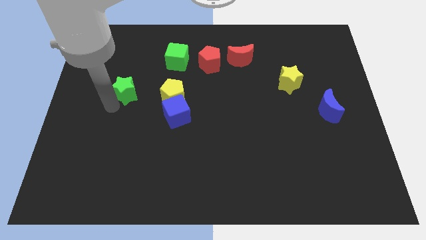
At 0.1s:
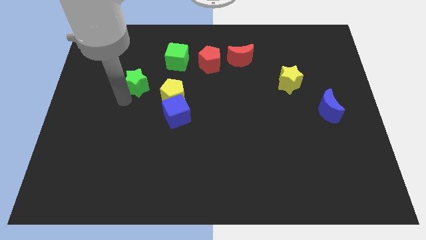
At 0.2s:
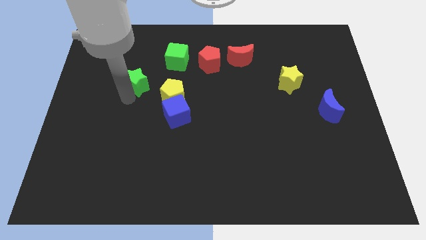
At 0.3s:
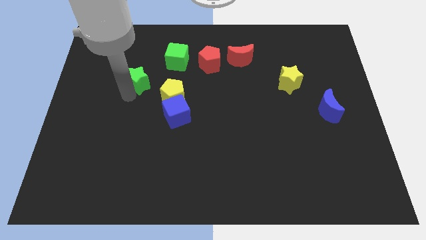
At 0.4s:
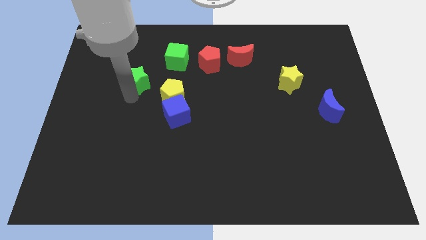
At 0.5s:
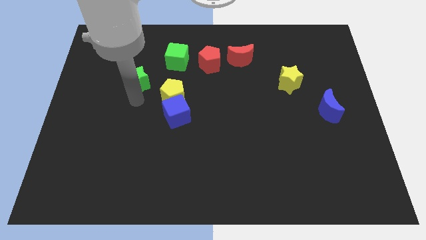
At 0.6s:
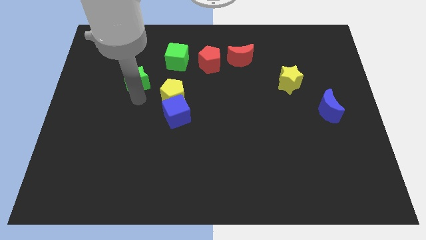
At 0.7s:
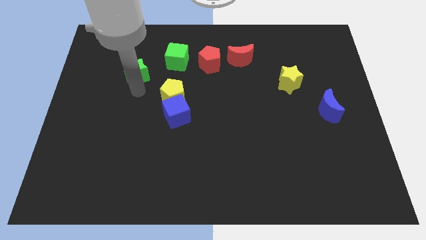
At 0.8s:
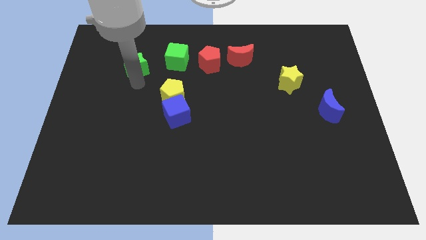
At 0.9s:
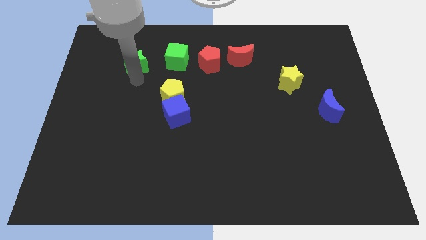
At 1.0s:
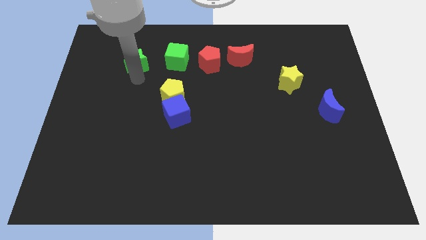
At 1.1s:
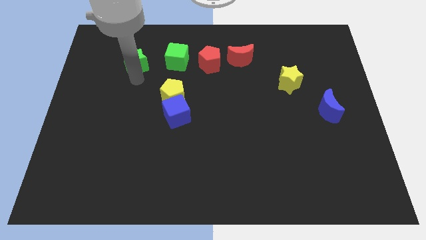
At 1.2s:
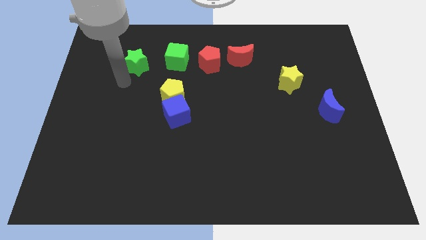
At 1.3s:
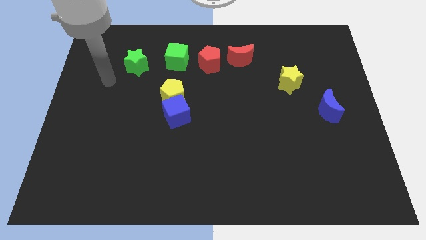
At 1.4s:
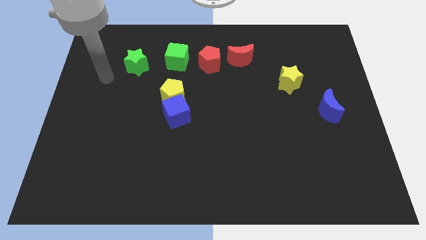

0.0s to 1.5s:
place green star to the left of green cube

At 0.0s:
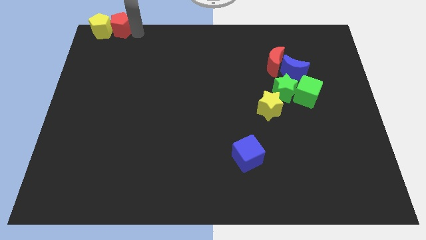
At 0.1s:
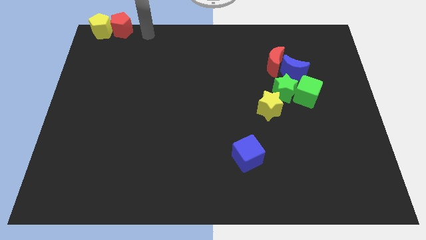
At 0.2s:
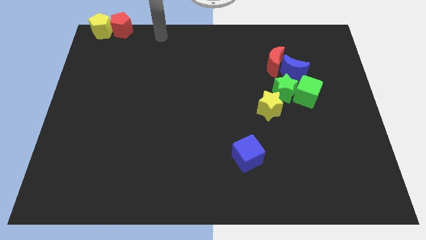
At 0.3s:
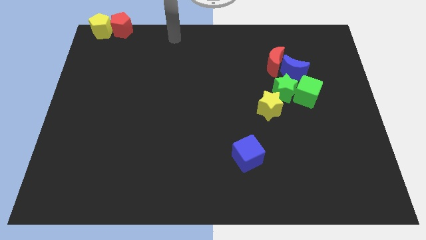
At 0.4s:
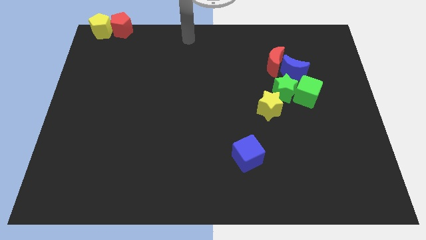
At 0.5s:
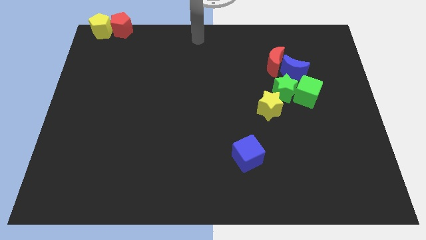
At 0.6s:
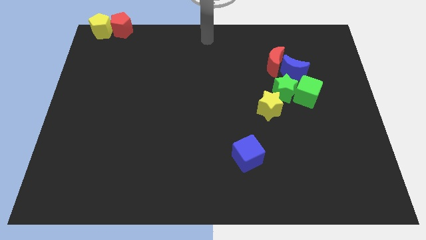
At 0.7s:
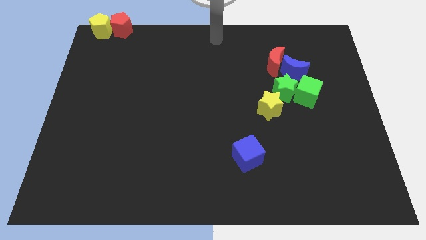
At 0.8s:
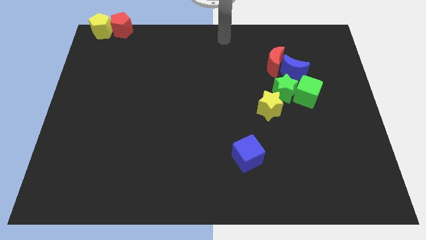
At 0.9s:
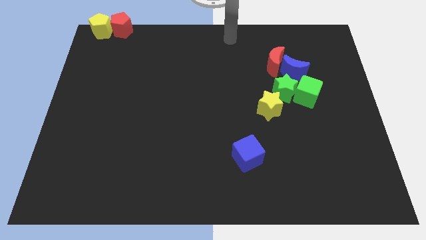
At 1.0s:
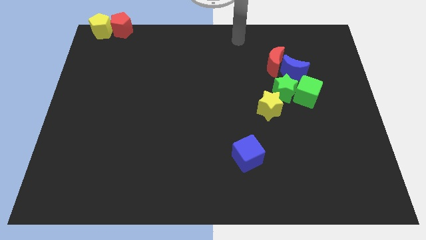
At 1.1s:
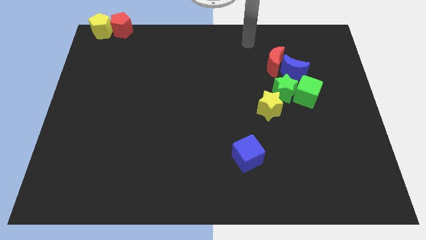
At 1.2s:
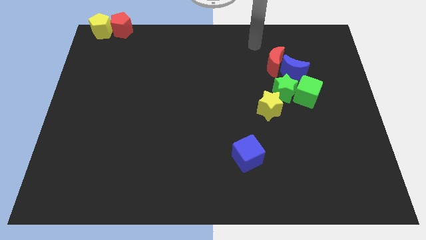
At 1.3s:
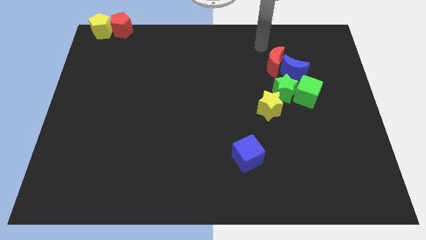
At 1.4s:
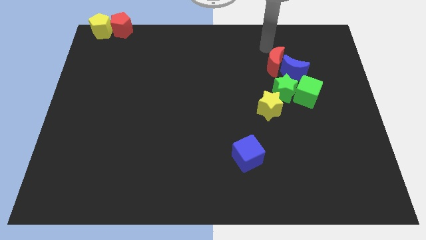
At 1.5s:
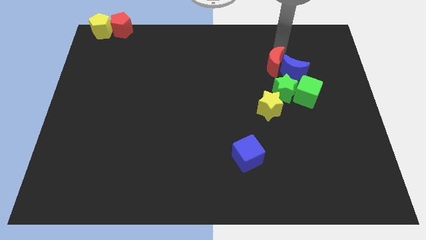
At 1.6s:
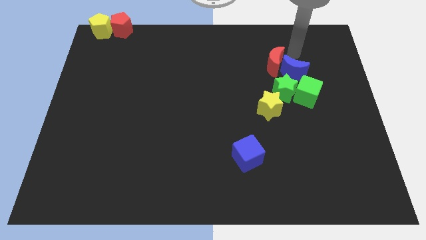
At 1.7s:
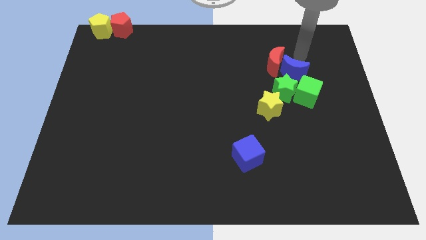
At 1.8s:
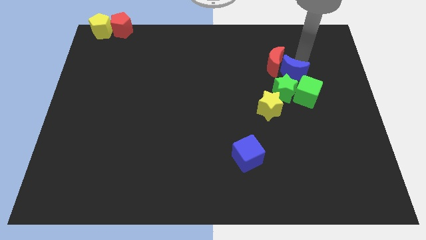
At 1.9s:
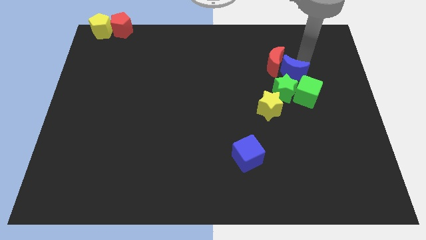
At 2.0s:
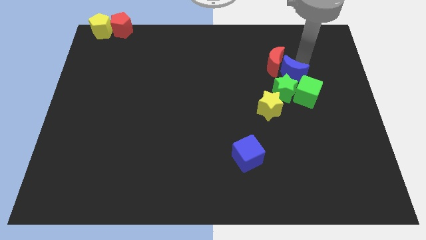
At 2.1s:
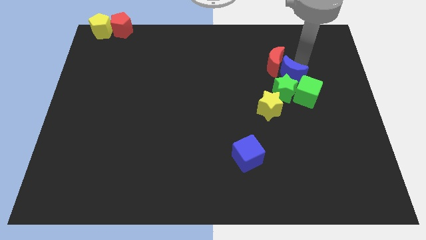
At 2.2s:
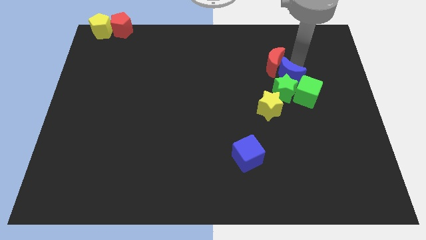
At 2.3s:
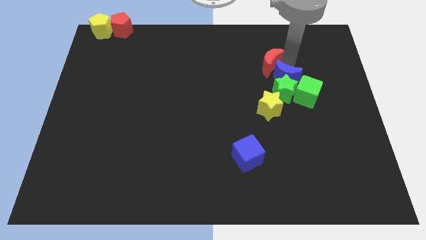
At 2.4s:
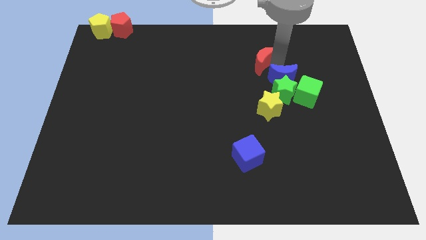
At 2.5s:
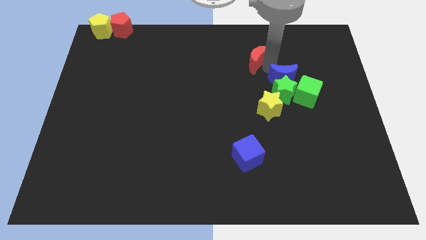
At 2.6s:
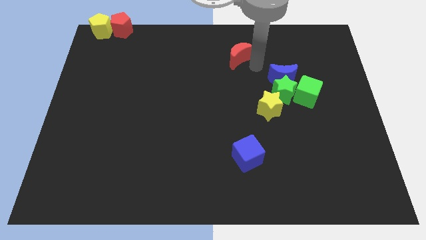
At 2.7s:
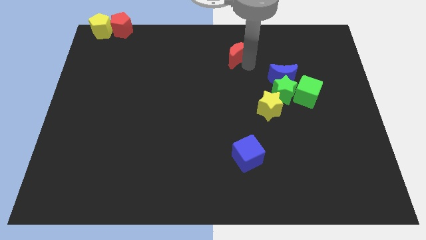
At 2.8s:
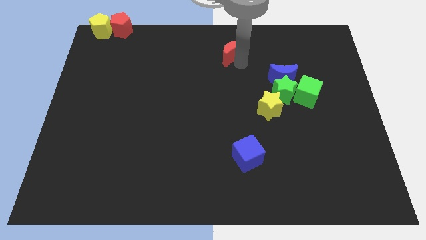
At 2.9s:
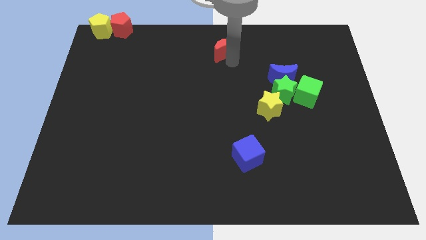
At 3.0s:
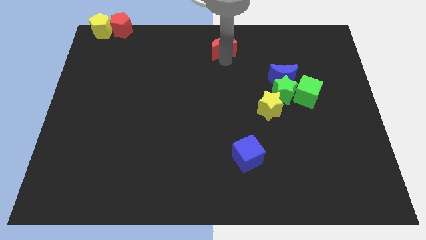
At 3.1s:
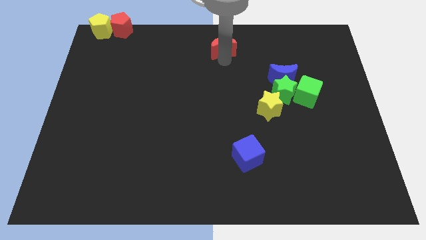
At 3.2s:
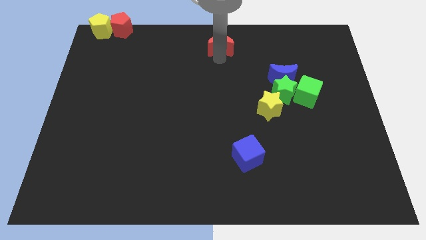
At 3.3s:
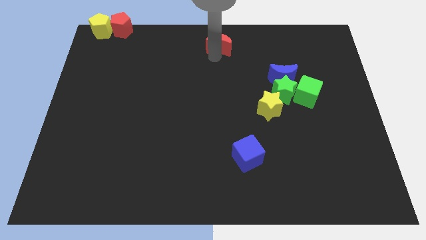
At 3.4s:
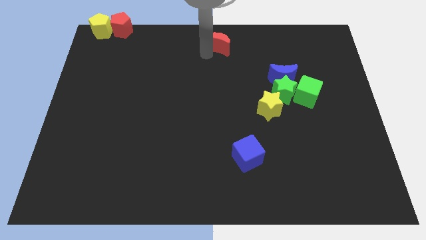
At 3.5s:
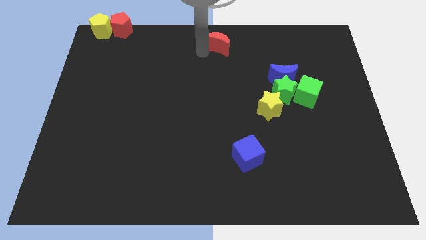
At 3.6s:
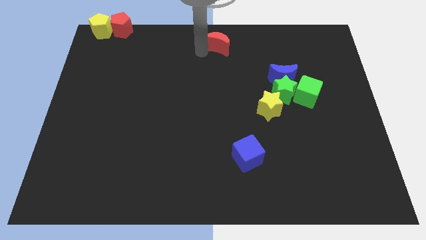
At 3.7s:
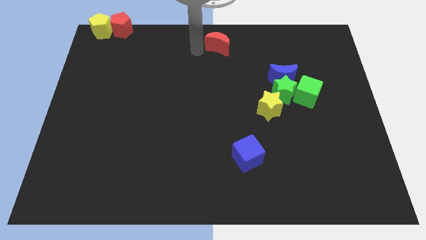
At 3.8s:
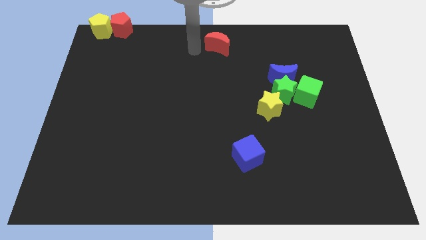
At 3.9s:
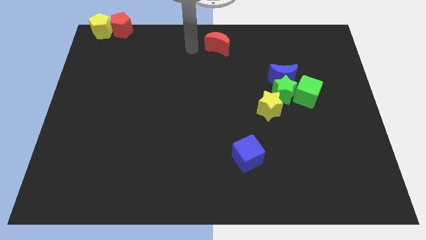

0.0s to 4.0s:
push the red crescent to the top center of the board

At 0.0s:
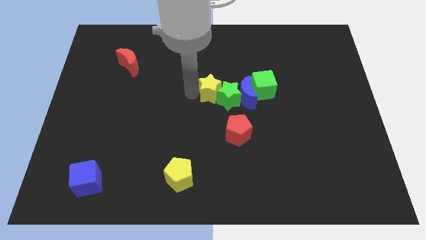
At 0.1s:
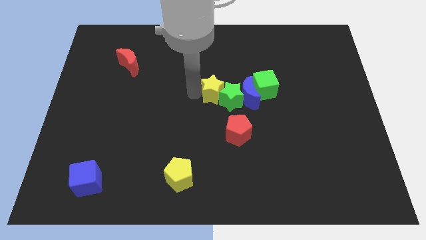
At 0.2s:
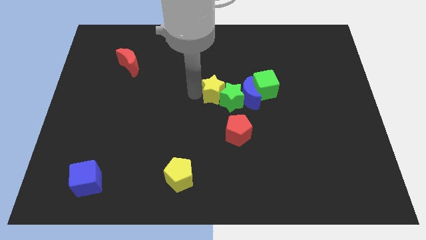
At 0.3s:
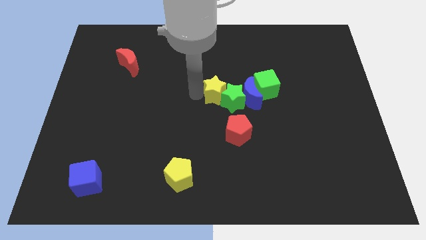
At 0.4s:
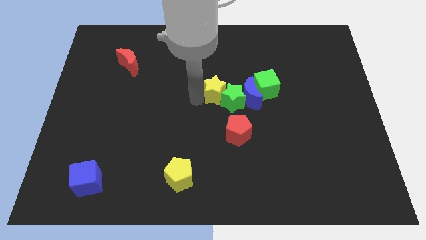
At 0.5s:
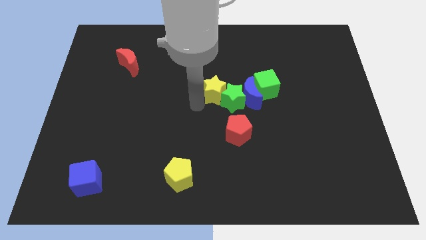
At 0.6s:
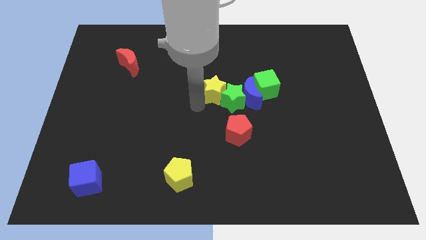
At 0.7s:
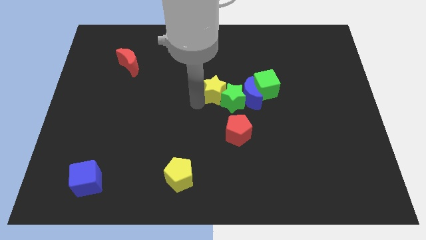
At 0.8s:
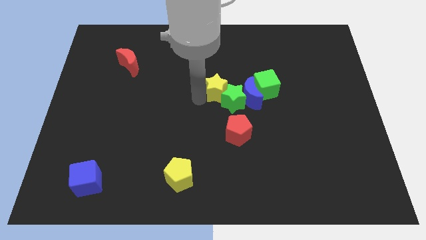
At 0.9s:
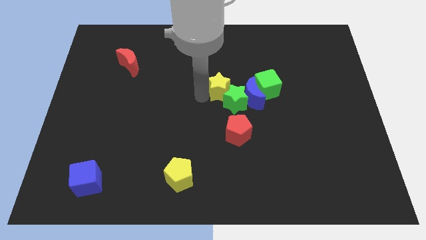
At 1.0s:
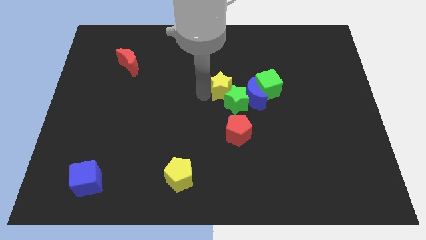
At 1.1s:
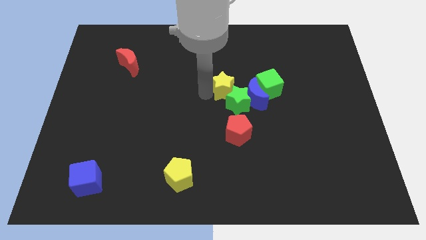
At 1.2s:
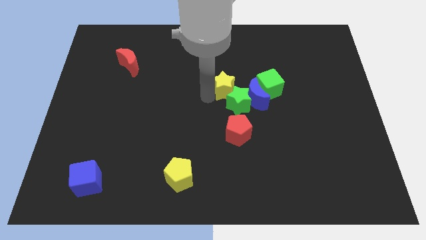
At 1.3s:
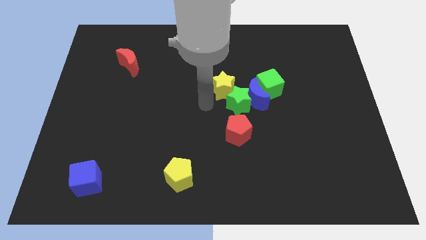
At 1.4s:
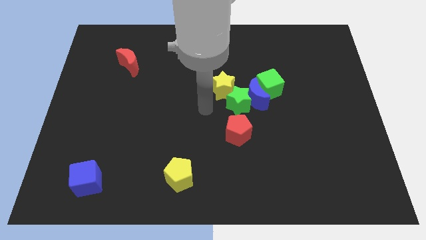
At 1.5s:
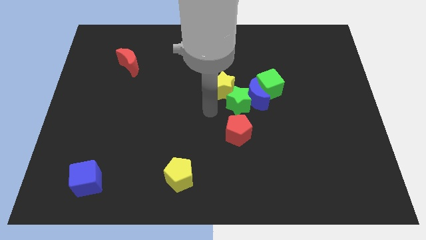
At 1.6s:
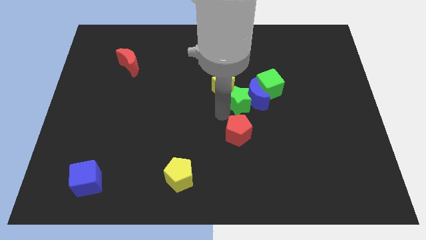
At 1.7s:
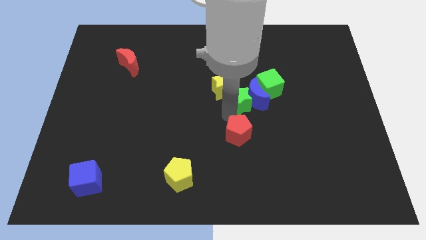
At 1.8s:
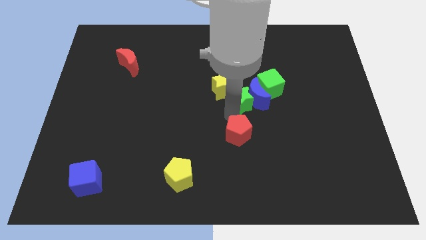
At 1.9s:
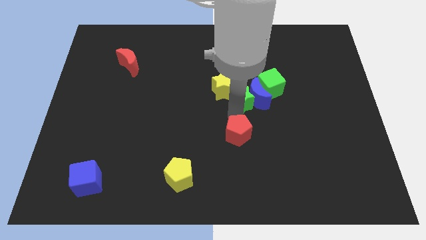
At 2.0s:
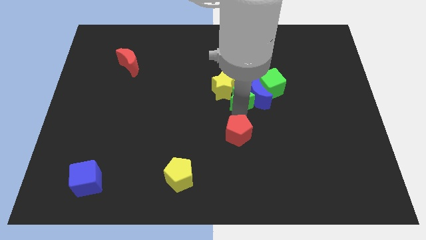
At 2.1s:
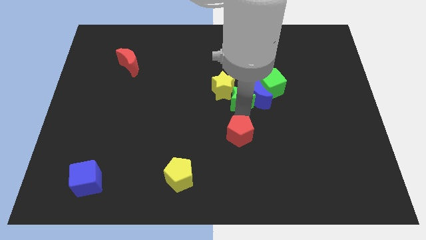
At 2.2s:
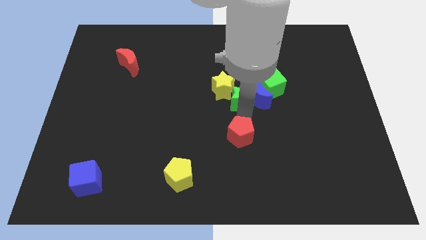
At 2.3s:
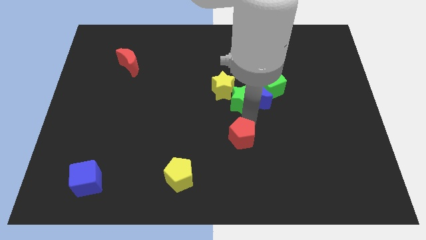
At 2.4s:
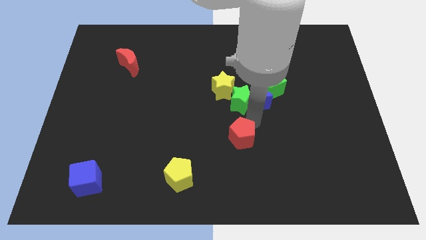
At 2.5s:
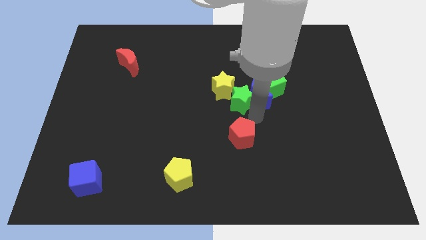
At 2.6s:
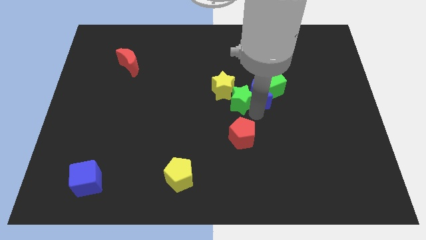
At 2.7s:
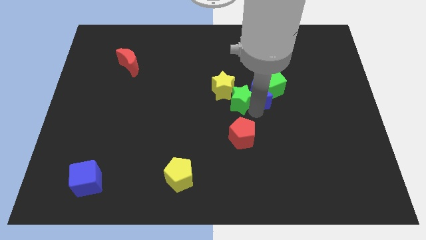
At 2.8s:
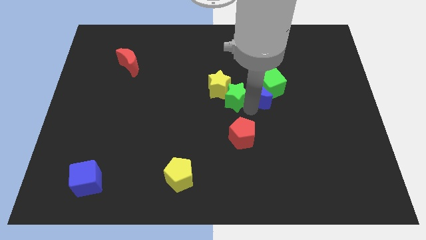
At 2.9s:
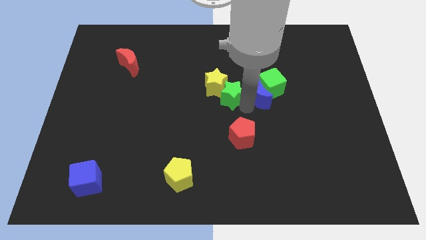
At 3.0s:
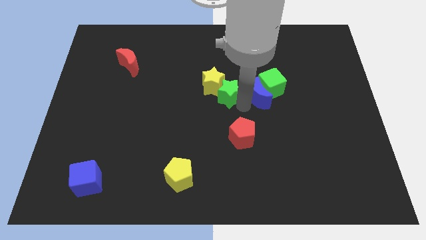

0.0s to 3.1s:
point your arm between green star and blue moon

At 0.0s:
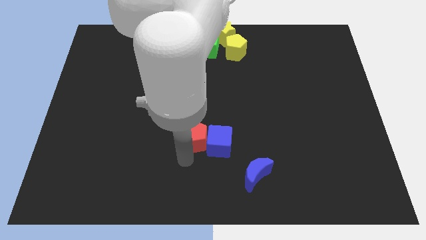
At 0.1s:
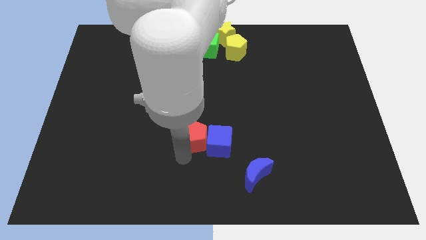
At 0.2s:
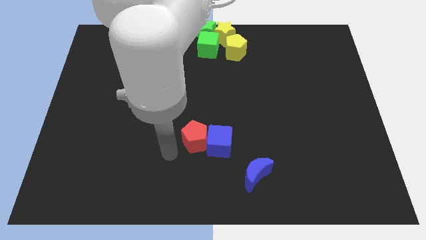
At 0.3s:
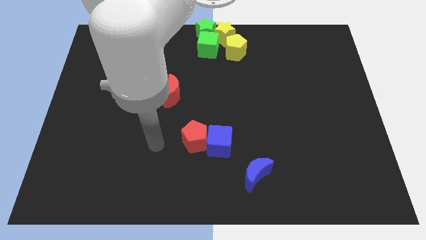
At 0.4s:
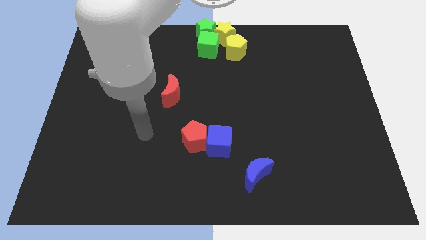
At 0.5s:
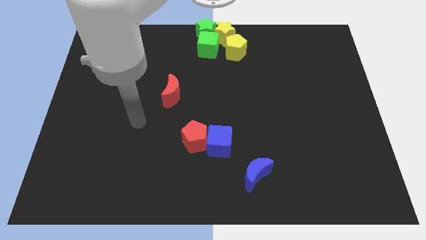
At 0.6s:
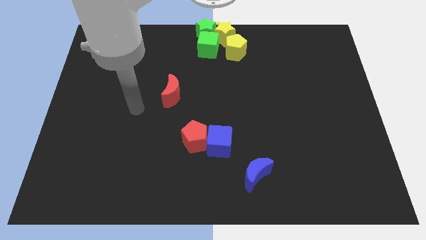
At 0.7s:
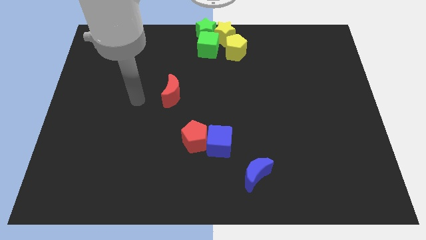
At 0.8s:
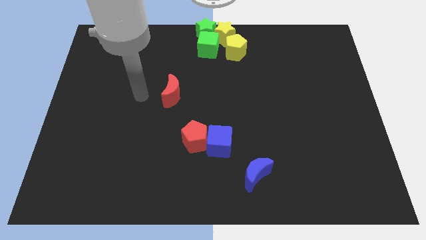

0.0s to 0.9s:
move the arm away from the red pentagon
